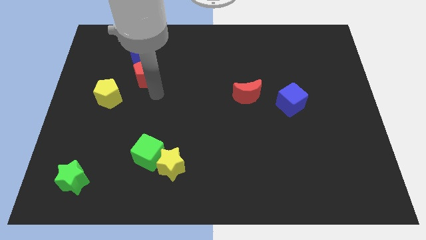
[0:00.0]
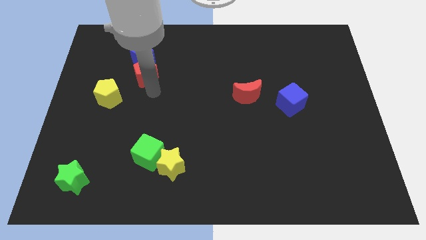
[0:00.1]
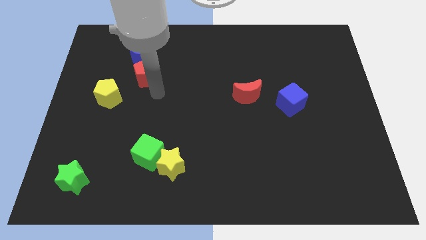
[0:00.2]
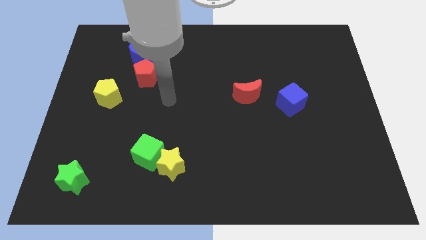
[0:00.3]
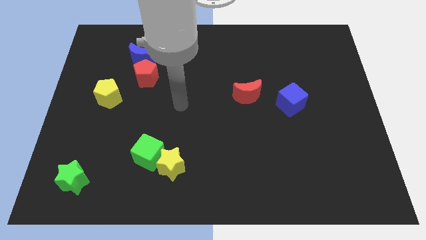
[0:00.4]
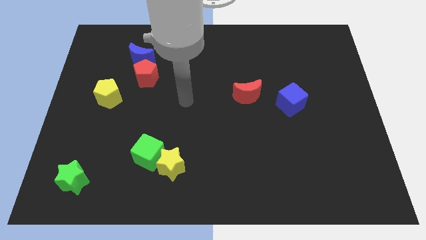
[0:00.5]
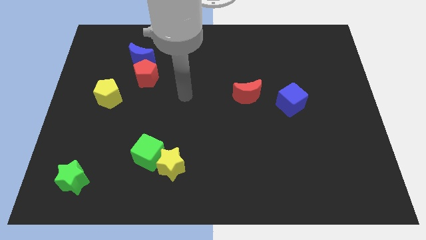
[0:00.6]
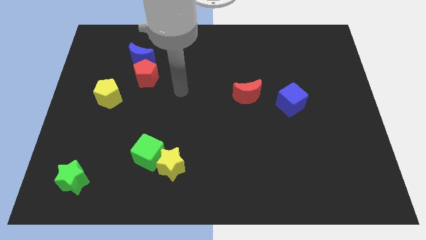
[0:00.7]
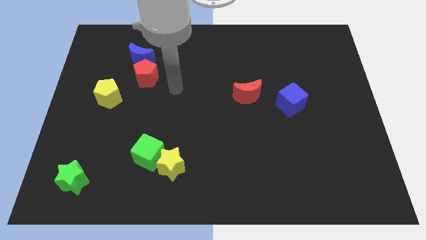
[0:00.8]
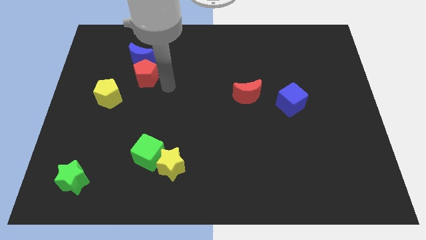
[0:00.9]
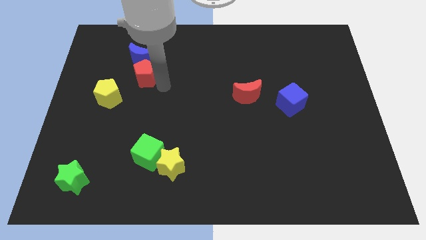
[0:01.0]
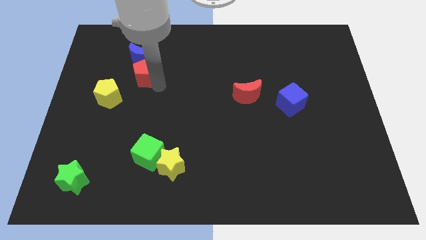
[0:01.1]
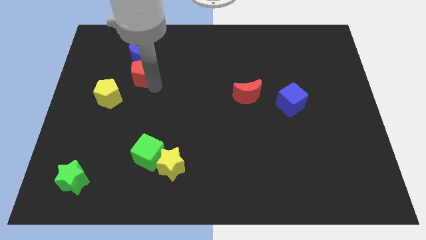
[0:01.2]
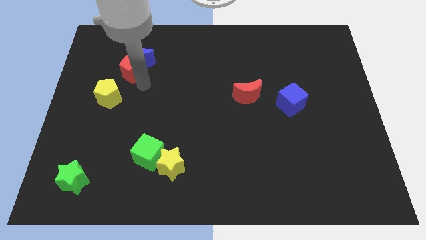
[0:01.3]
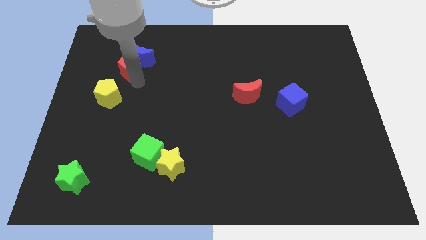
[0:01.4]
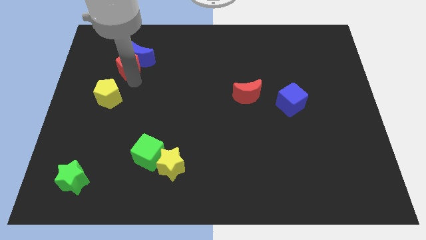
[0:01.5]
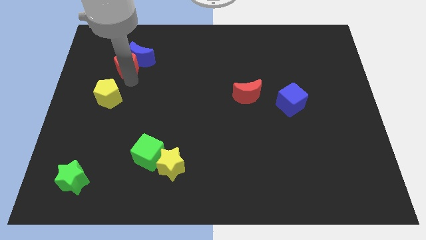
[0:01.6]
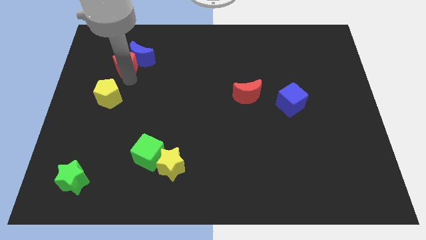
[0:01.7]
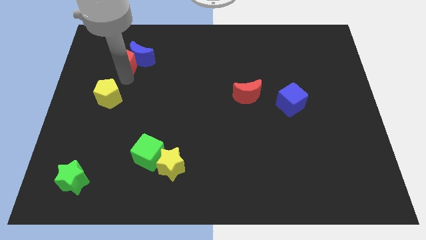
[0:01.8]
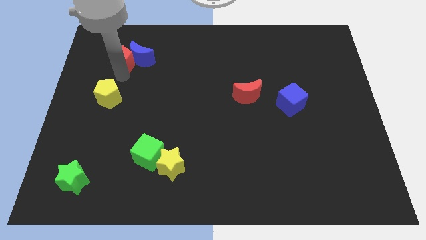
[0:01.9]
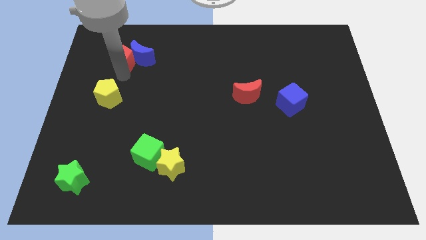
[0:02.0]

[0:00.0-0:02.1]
push the red pentagon into the blue crescent

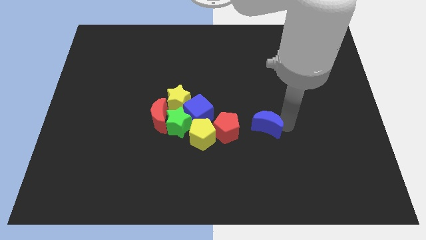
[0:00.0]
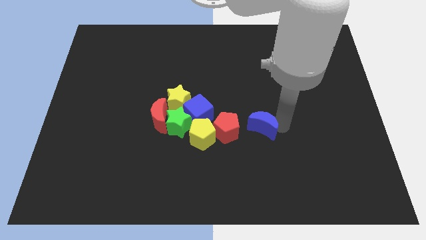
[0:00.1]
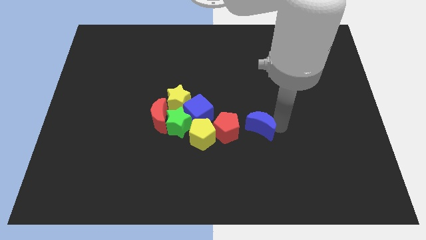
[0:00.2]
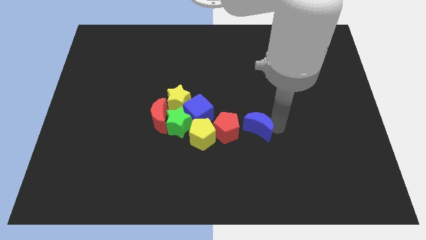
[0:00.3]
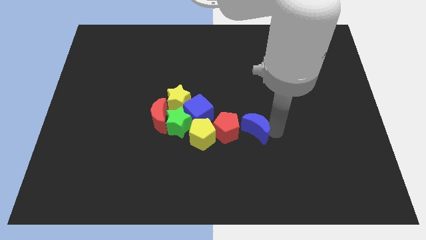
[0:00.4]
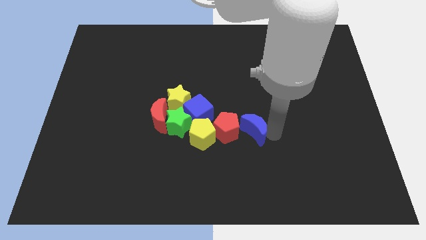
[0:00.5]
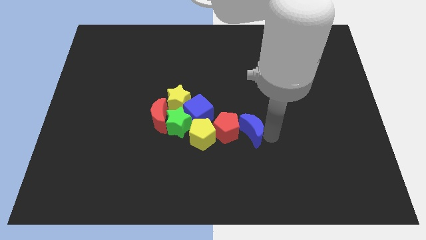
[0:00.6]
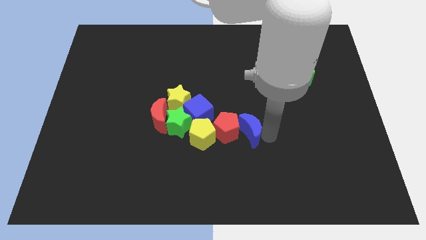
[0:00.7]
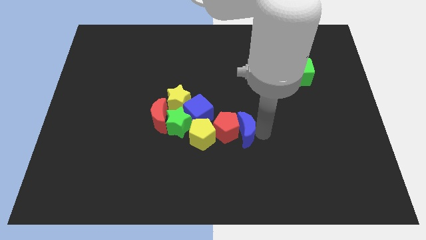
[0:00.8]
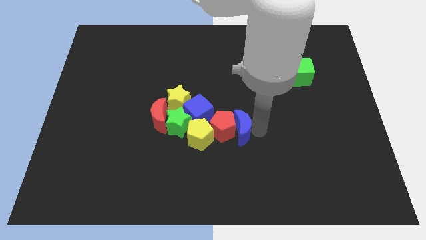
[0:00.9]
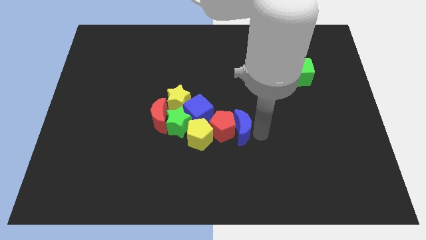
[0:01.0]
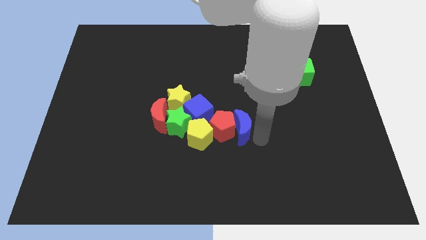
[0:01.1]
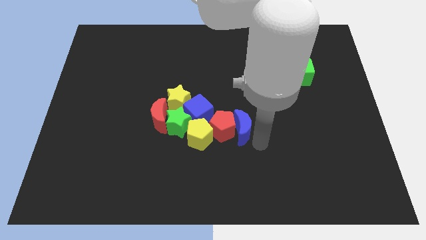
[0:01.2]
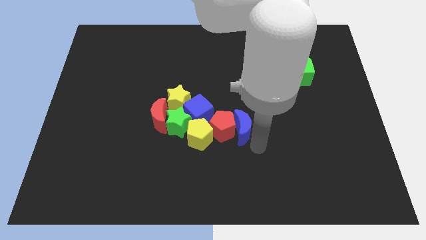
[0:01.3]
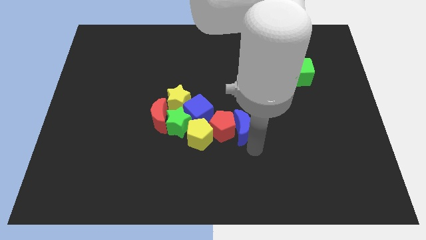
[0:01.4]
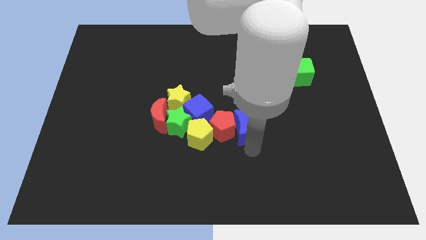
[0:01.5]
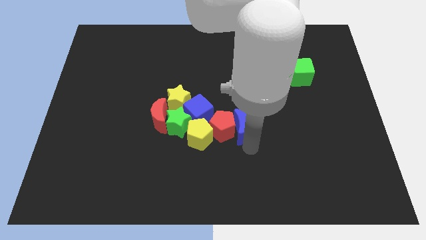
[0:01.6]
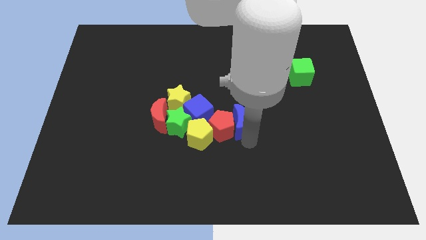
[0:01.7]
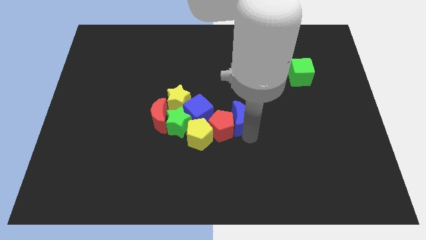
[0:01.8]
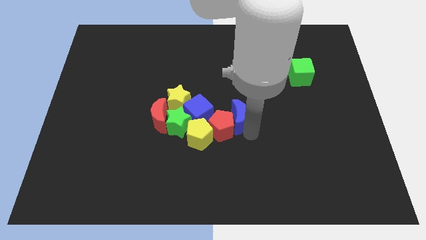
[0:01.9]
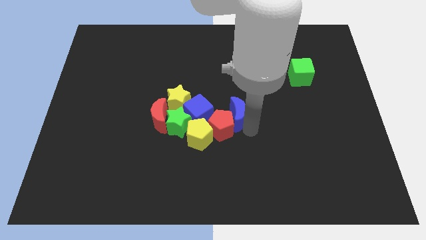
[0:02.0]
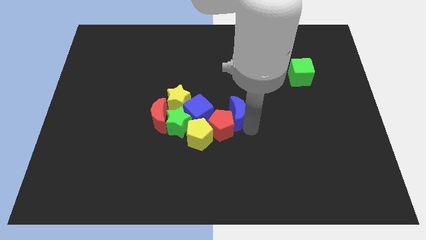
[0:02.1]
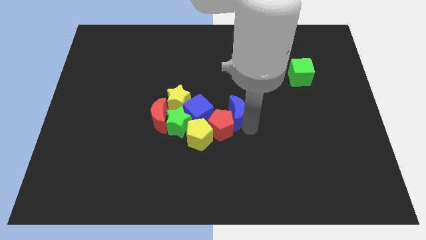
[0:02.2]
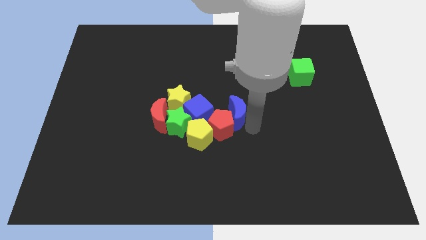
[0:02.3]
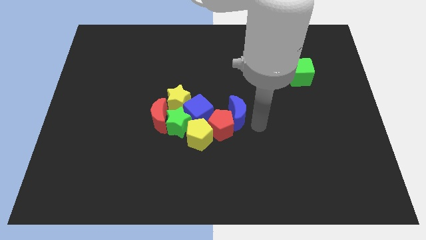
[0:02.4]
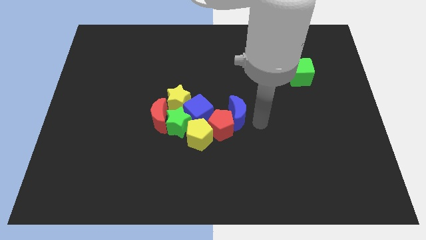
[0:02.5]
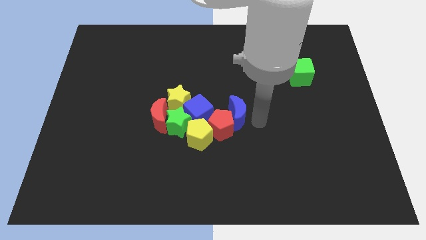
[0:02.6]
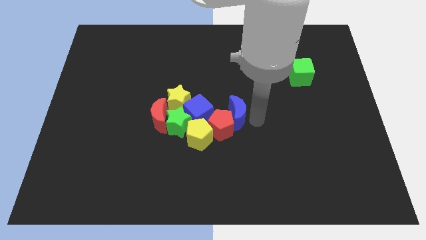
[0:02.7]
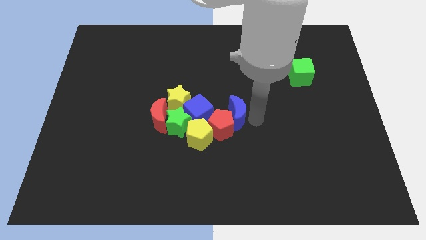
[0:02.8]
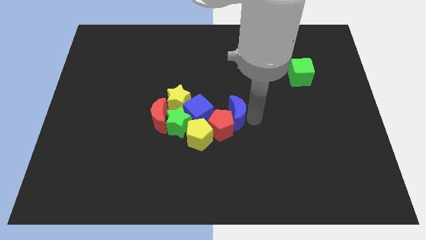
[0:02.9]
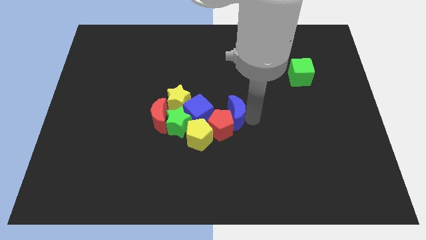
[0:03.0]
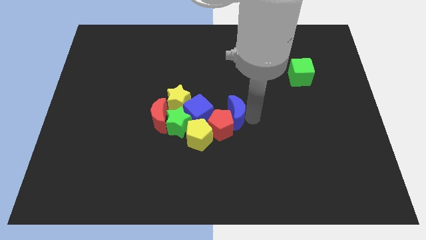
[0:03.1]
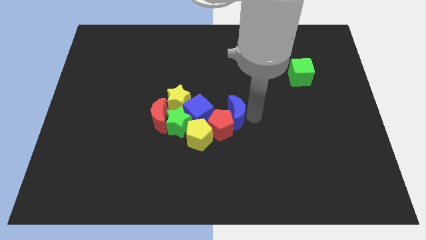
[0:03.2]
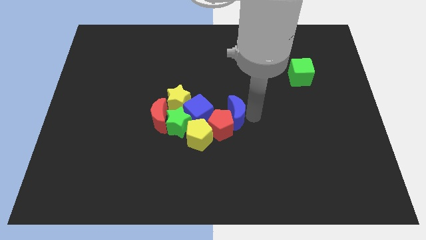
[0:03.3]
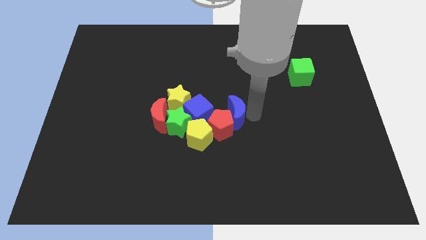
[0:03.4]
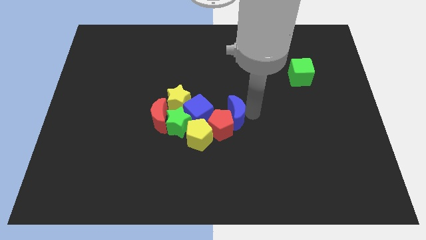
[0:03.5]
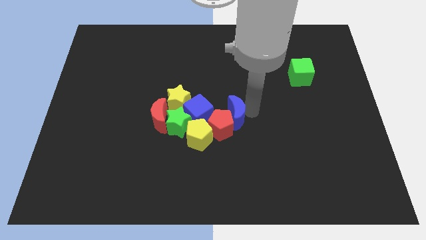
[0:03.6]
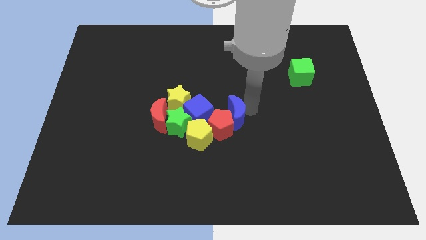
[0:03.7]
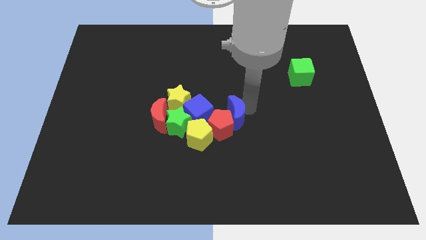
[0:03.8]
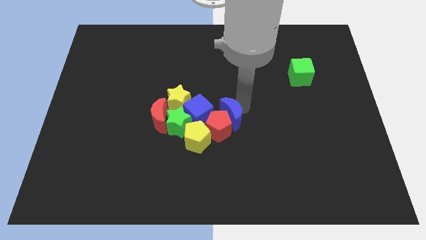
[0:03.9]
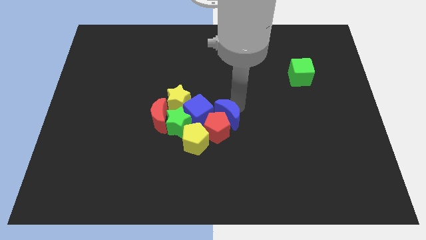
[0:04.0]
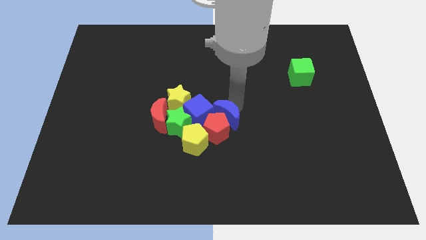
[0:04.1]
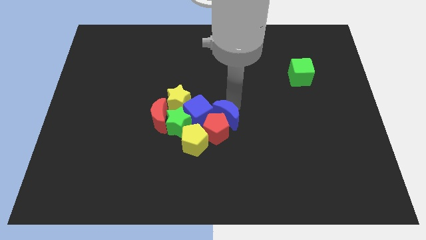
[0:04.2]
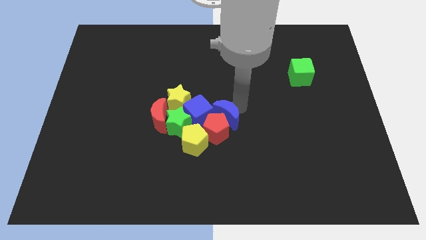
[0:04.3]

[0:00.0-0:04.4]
push the blue crescent to the group of blocks

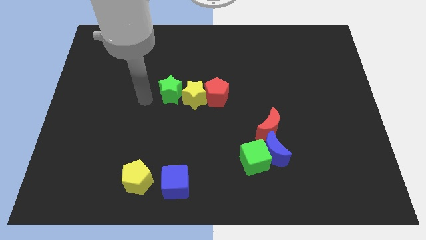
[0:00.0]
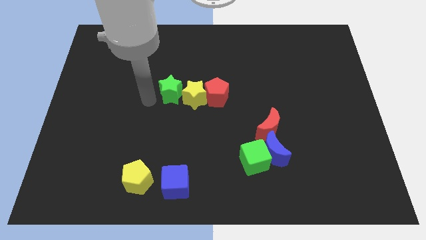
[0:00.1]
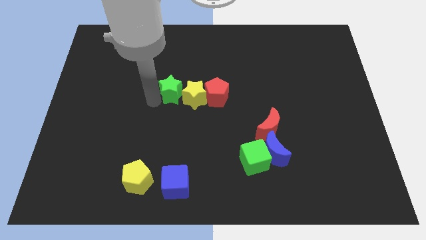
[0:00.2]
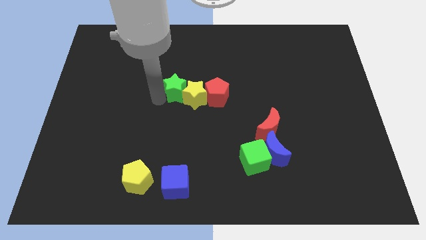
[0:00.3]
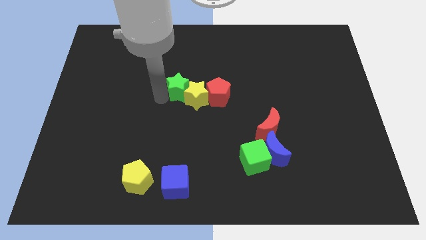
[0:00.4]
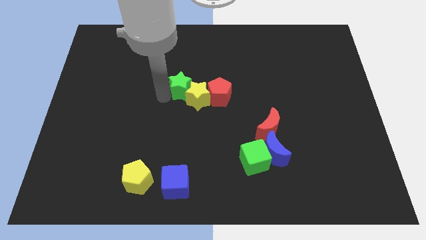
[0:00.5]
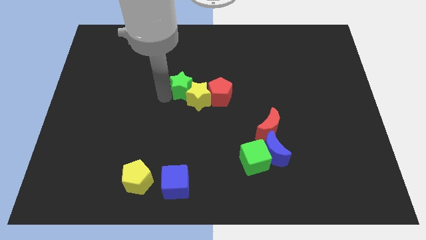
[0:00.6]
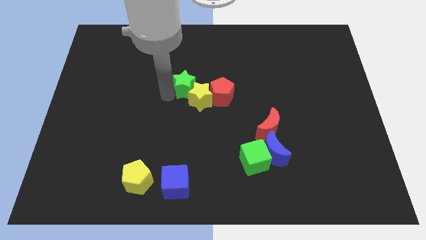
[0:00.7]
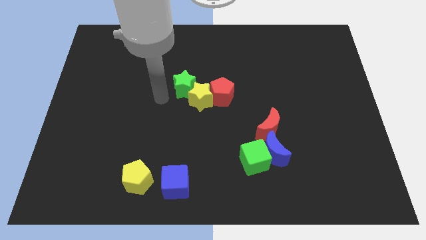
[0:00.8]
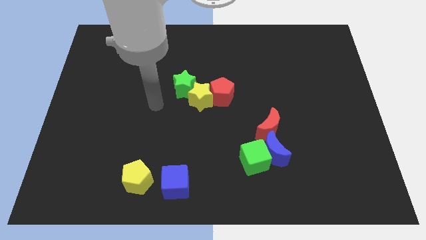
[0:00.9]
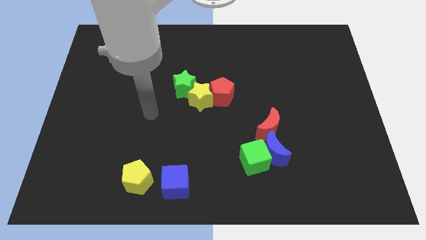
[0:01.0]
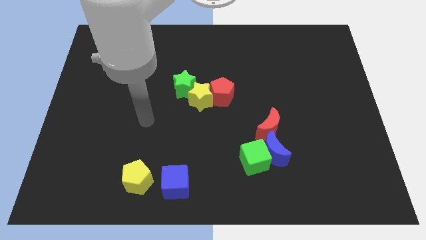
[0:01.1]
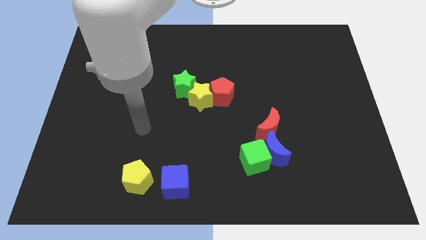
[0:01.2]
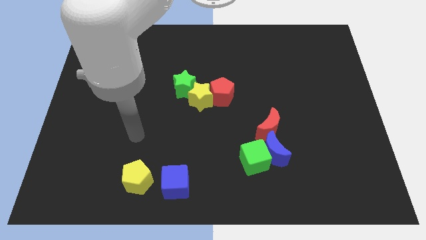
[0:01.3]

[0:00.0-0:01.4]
push the green star into the yellow star

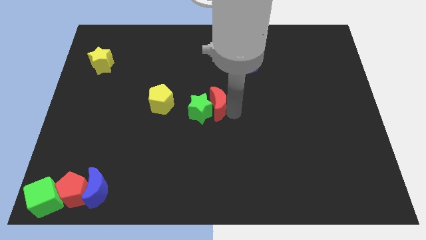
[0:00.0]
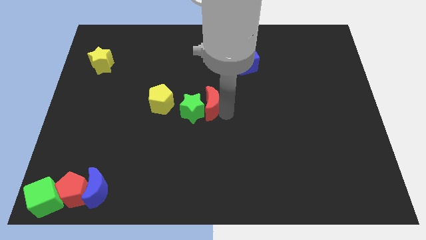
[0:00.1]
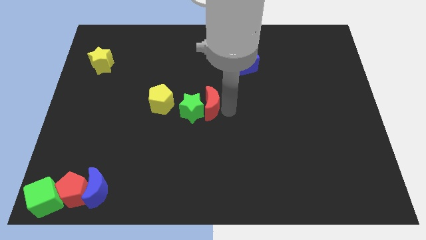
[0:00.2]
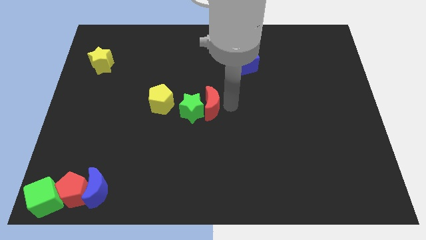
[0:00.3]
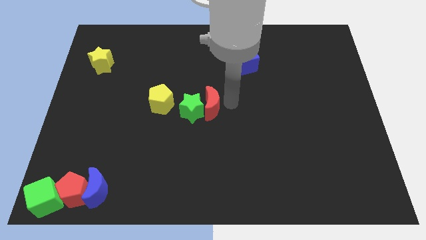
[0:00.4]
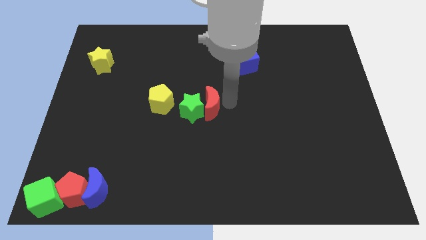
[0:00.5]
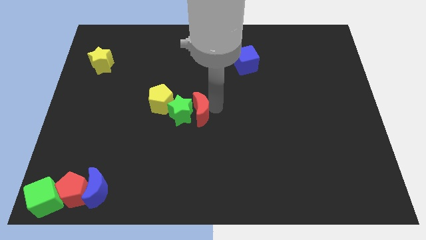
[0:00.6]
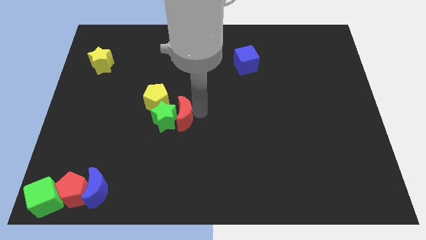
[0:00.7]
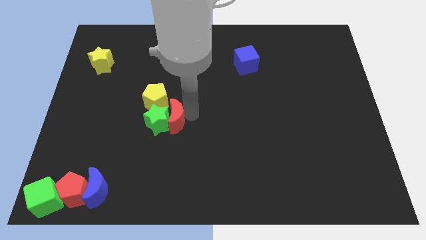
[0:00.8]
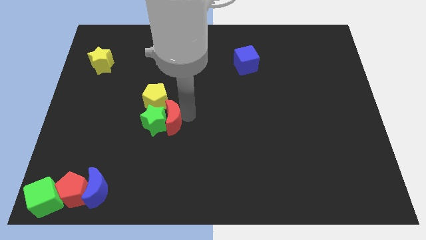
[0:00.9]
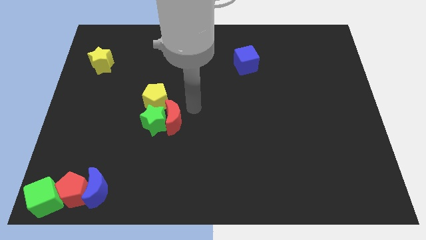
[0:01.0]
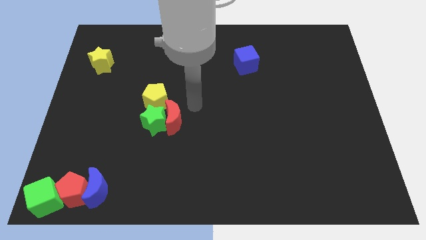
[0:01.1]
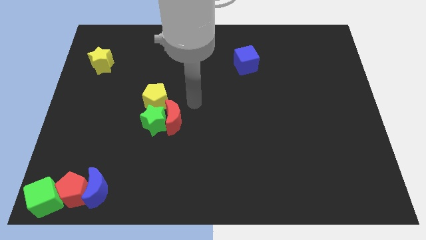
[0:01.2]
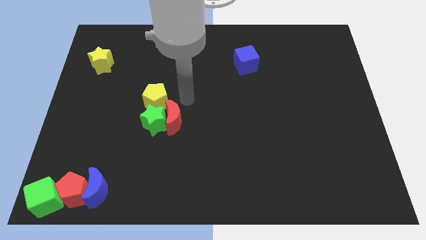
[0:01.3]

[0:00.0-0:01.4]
push green star below yellow pentagon with the help of red crescent
